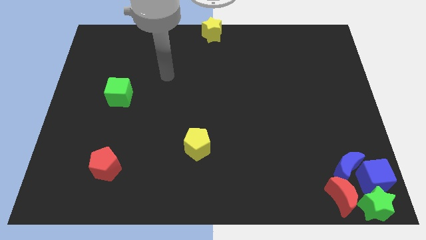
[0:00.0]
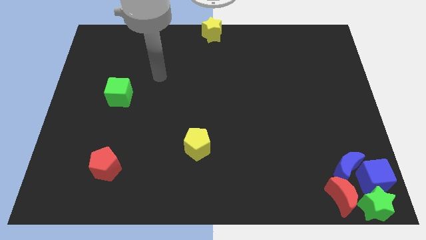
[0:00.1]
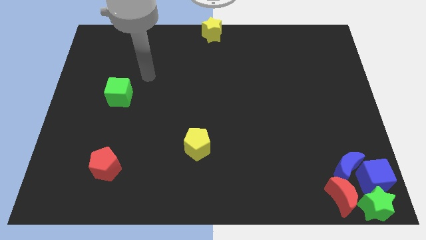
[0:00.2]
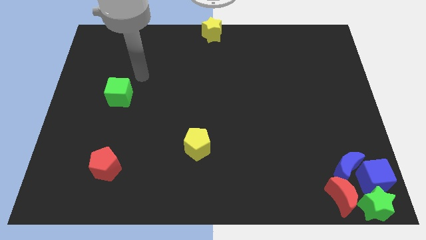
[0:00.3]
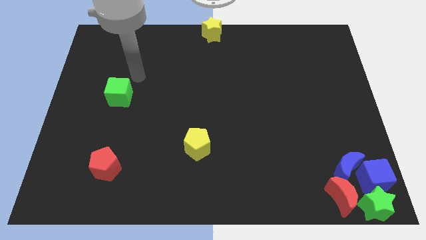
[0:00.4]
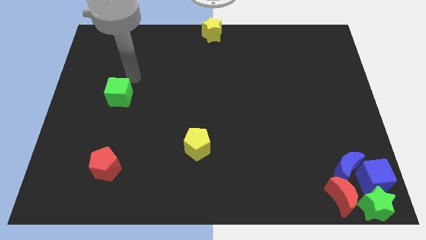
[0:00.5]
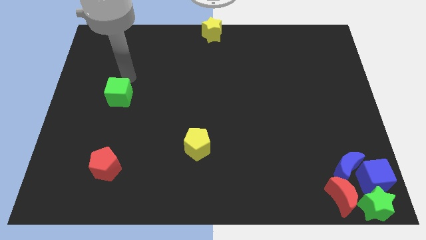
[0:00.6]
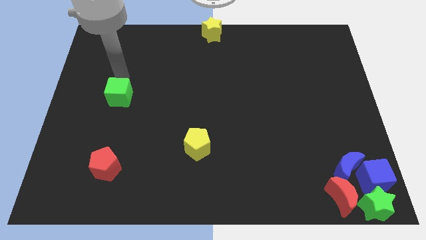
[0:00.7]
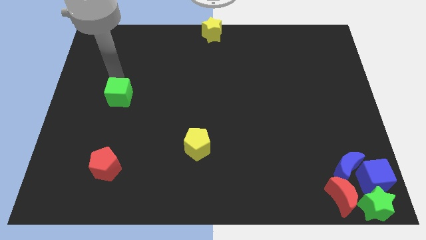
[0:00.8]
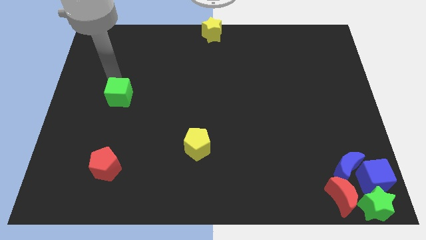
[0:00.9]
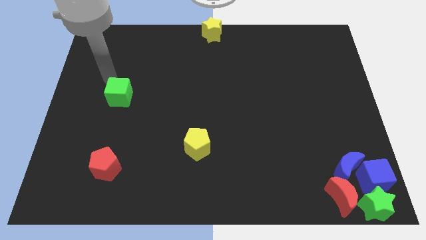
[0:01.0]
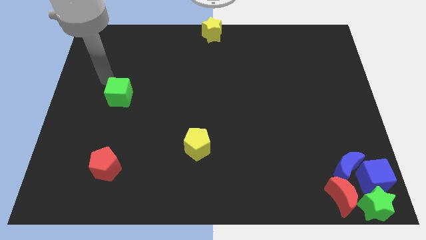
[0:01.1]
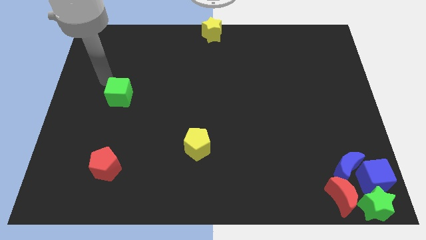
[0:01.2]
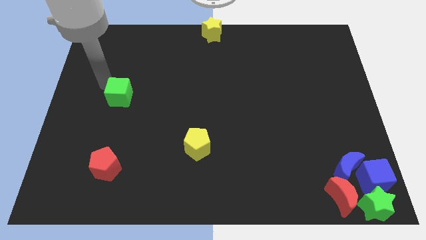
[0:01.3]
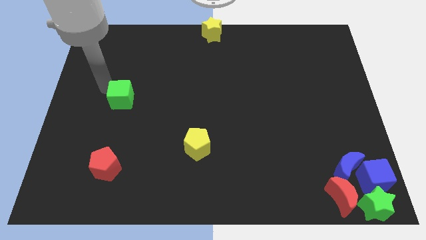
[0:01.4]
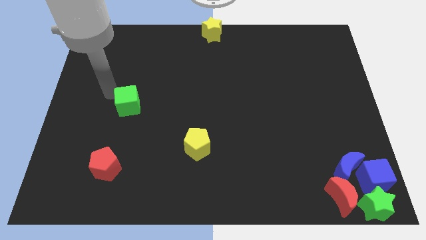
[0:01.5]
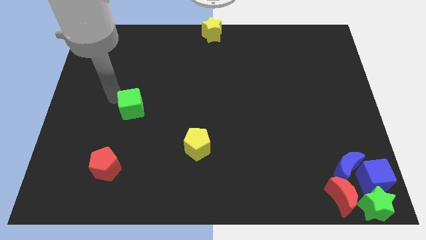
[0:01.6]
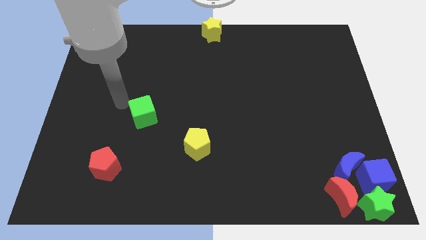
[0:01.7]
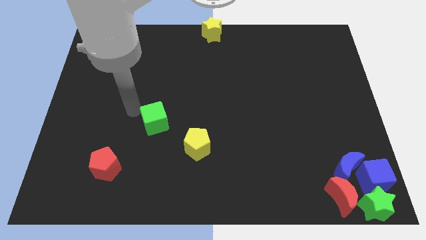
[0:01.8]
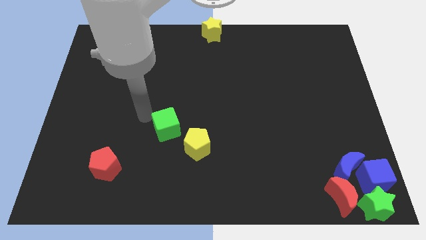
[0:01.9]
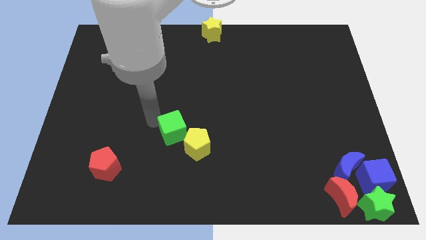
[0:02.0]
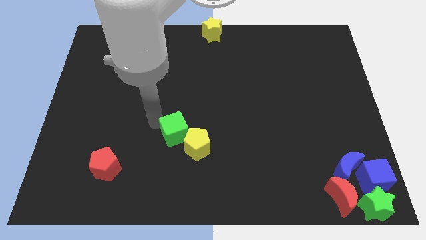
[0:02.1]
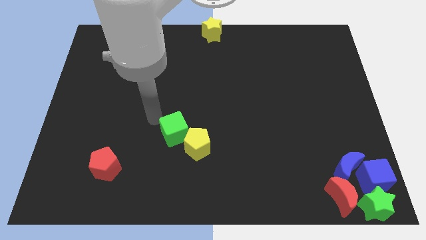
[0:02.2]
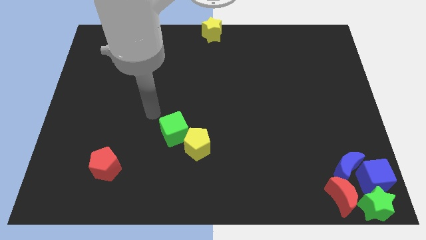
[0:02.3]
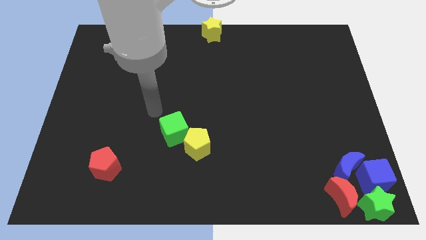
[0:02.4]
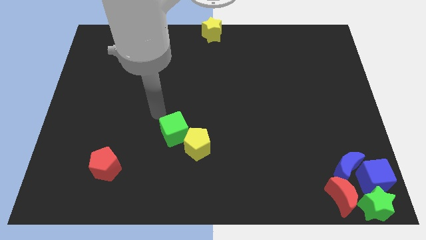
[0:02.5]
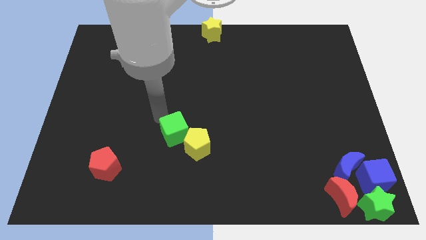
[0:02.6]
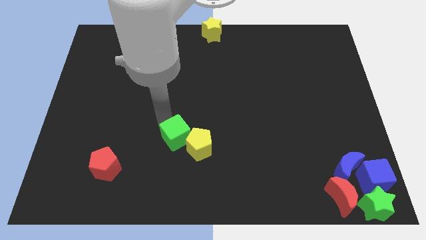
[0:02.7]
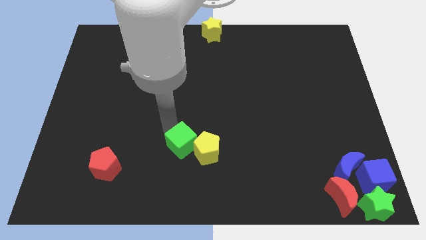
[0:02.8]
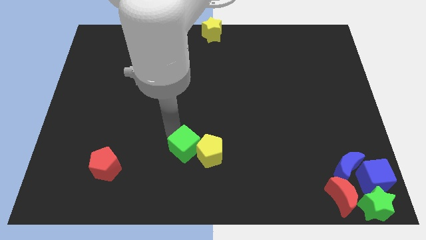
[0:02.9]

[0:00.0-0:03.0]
move the green cube top left above the yellow pentagon

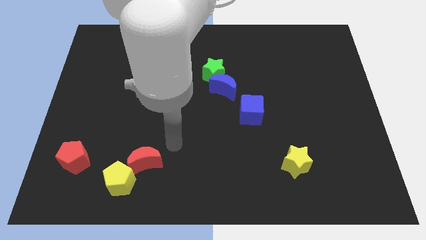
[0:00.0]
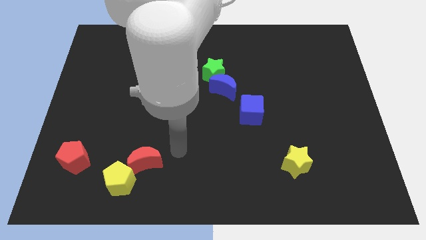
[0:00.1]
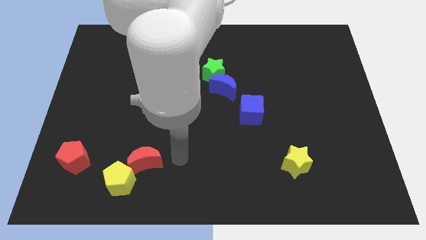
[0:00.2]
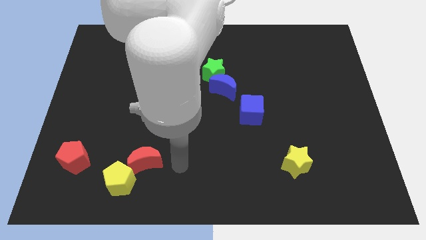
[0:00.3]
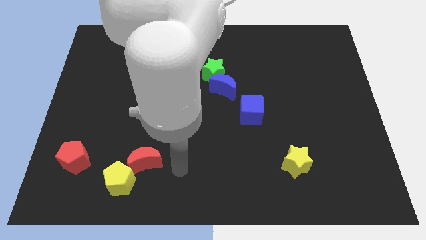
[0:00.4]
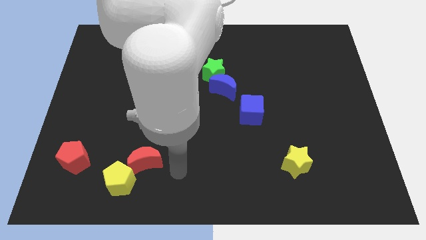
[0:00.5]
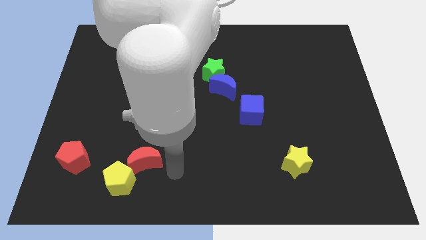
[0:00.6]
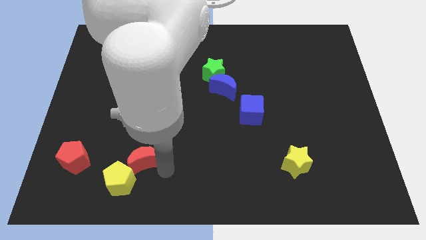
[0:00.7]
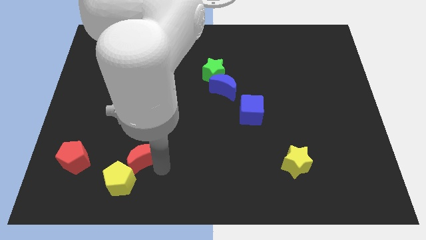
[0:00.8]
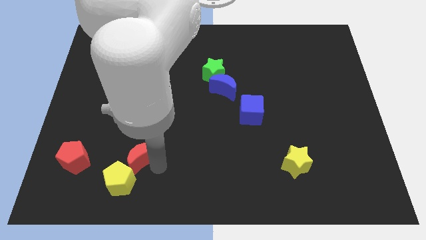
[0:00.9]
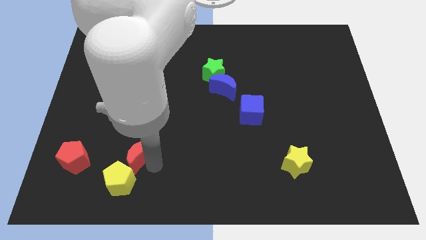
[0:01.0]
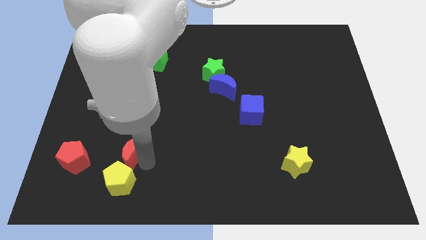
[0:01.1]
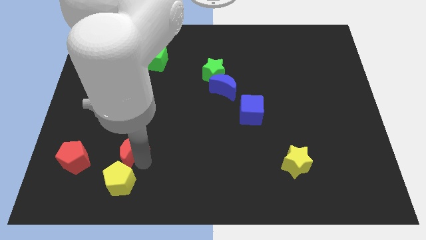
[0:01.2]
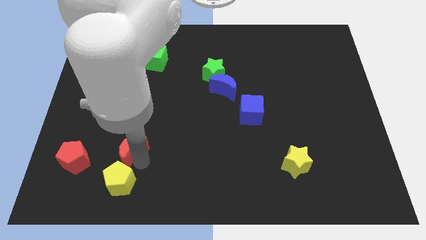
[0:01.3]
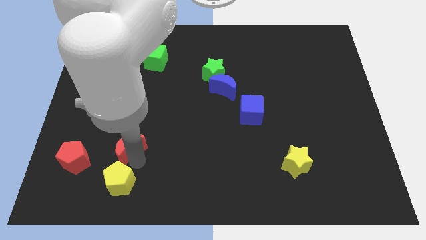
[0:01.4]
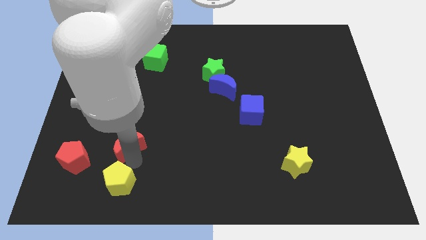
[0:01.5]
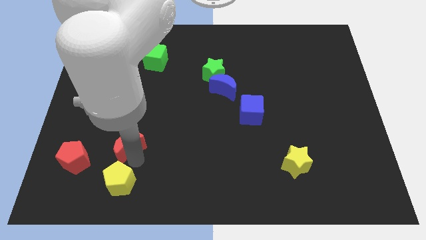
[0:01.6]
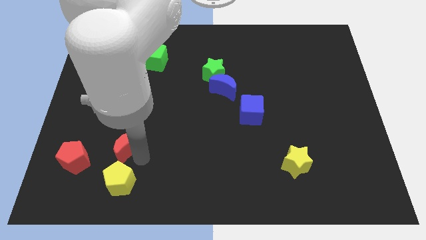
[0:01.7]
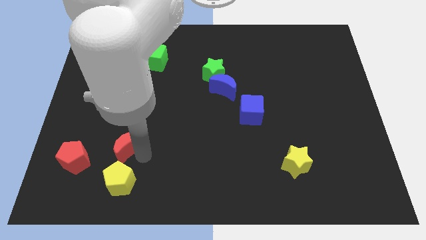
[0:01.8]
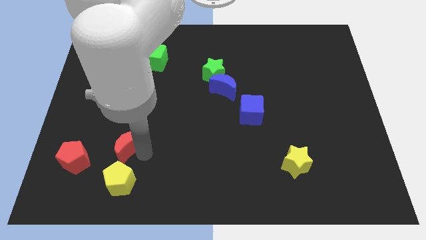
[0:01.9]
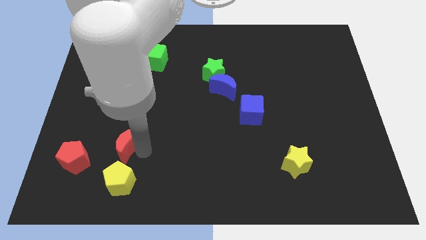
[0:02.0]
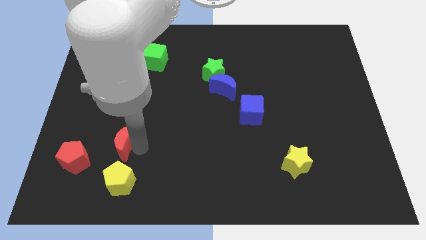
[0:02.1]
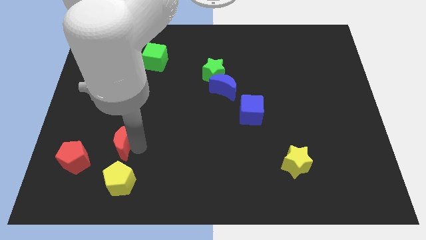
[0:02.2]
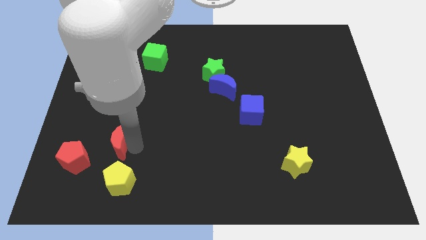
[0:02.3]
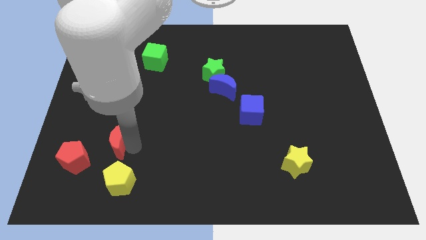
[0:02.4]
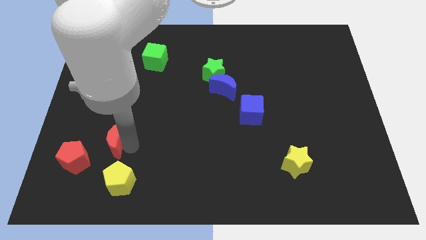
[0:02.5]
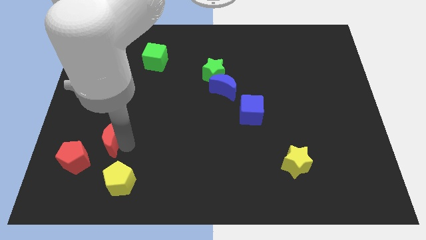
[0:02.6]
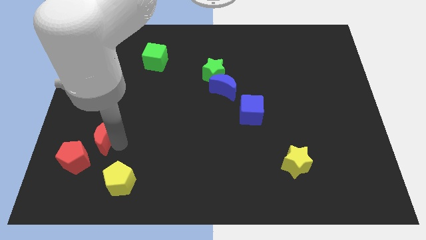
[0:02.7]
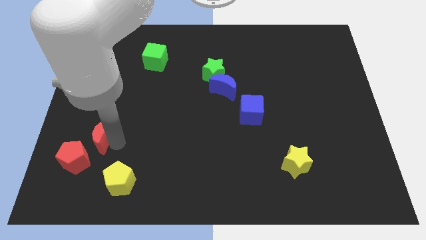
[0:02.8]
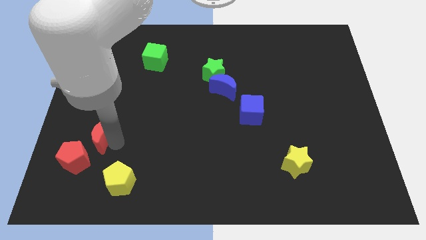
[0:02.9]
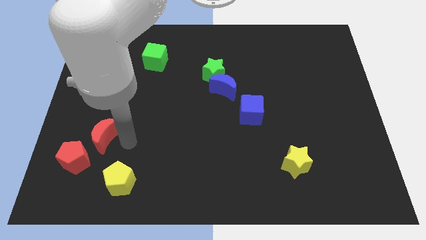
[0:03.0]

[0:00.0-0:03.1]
slide red moon to the top right of red pentagon

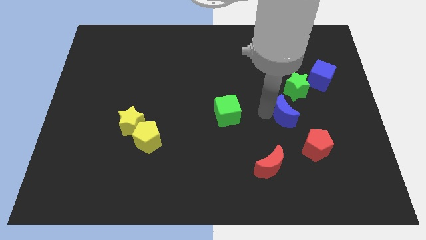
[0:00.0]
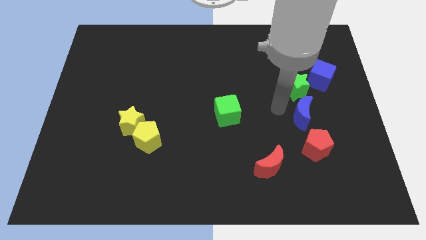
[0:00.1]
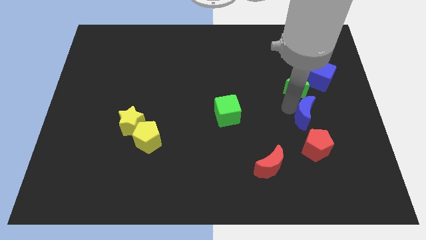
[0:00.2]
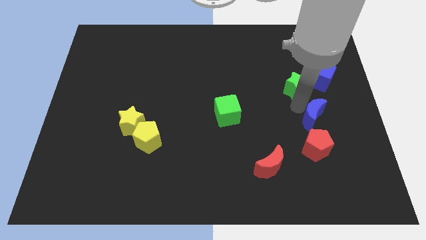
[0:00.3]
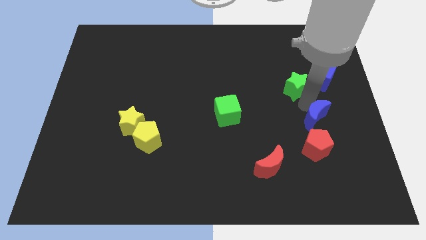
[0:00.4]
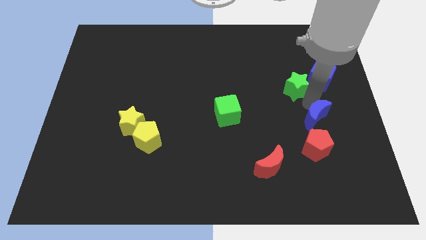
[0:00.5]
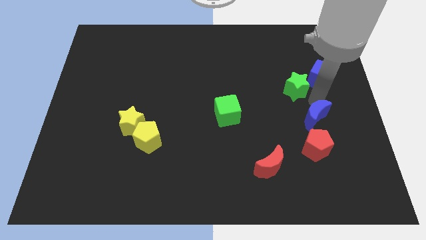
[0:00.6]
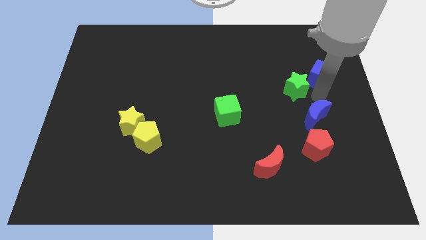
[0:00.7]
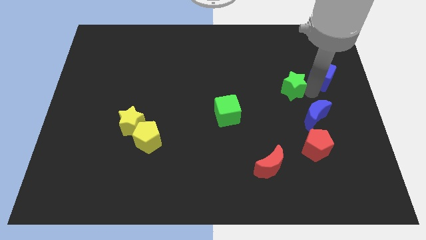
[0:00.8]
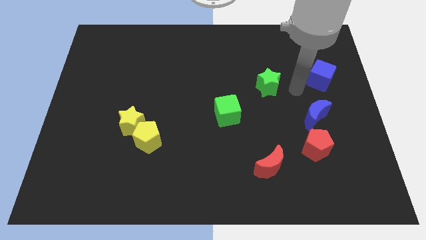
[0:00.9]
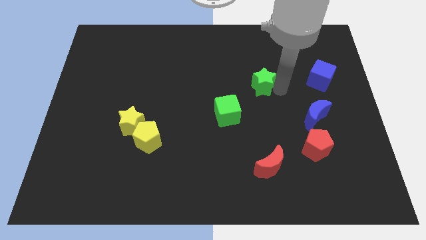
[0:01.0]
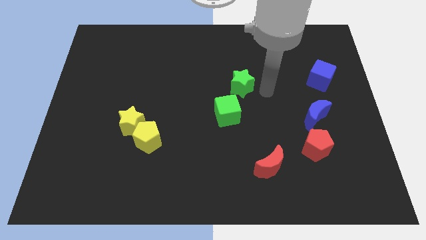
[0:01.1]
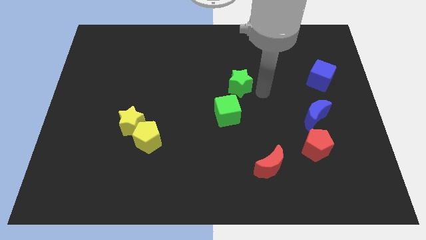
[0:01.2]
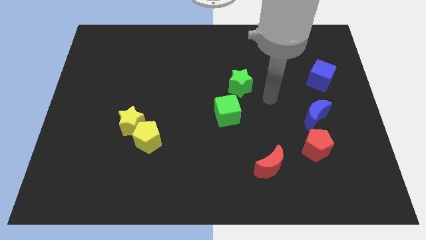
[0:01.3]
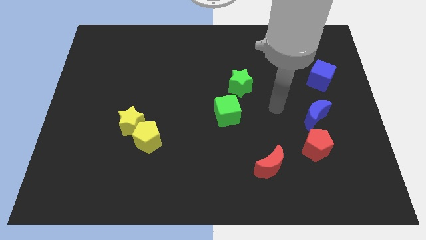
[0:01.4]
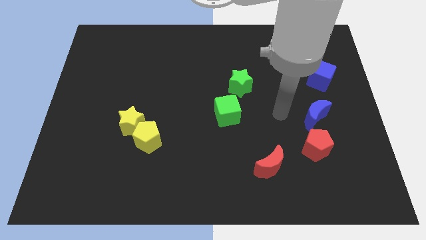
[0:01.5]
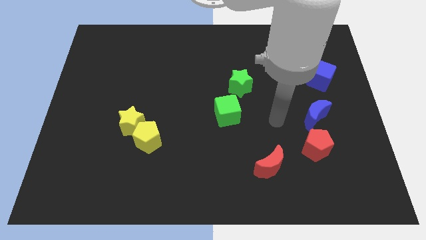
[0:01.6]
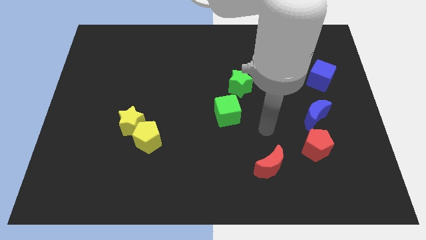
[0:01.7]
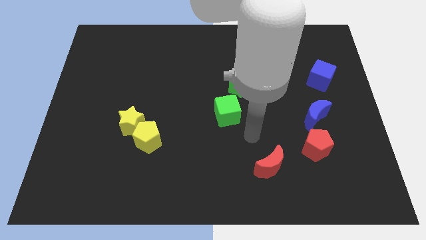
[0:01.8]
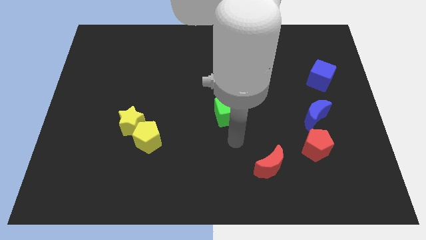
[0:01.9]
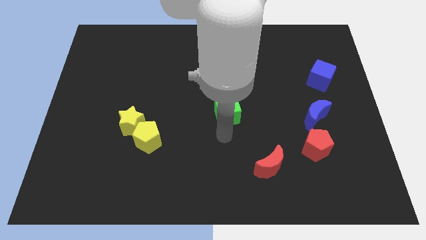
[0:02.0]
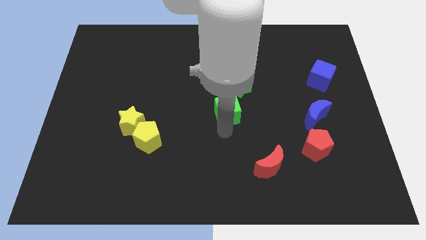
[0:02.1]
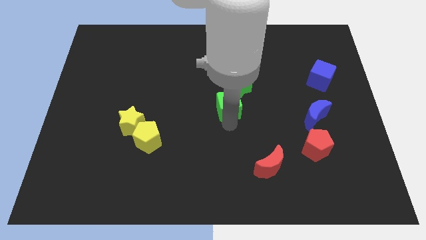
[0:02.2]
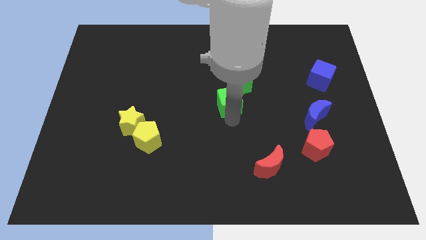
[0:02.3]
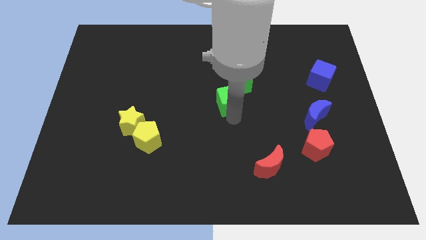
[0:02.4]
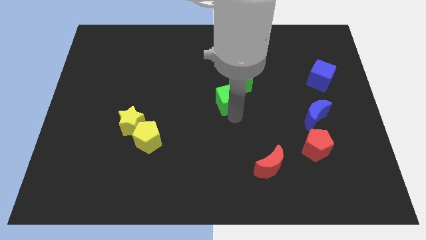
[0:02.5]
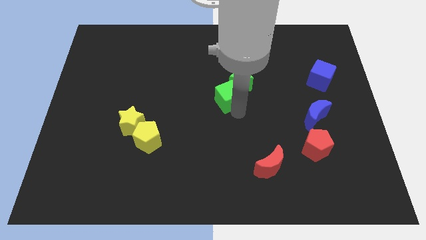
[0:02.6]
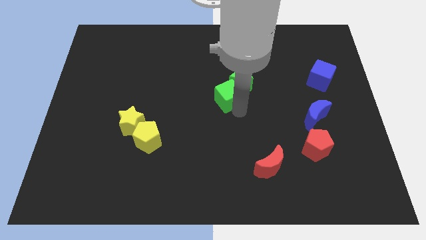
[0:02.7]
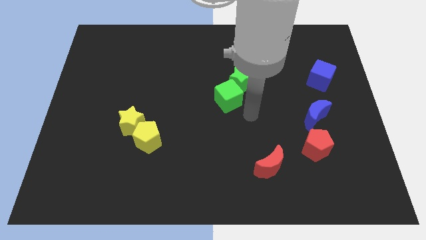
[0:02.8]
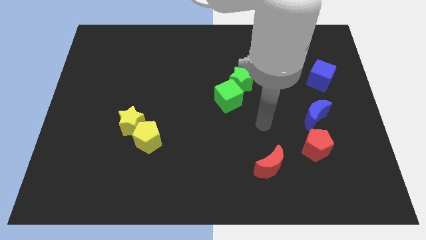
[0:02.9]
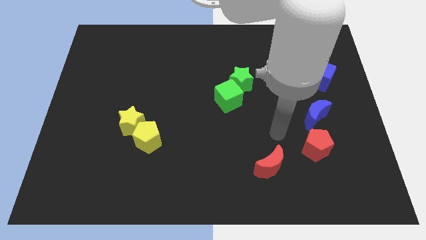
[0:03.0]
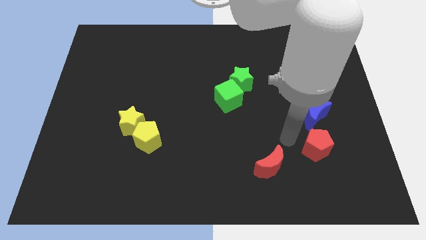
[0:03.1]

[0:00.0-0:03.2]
group up the green blocks at the center of the table
